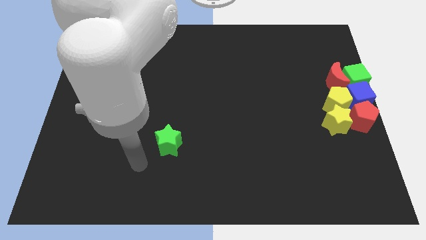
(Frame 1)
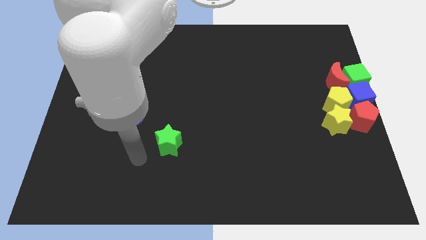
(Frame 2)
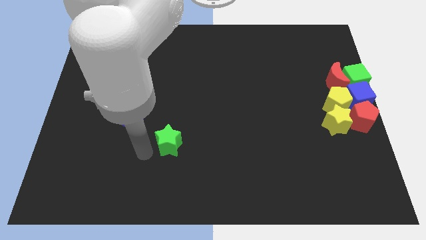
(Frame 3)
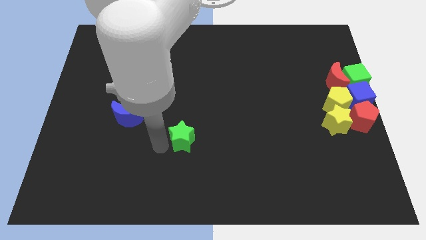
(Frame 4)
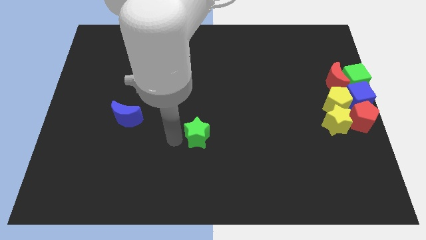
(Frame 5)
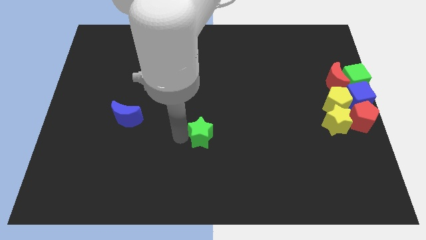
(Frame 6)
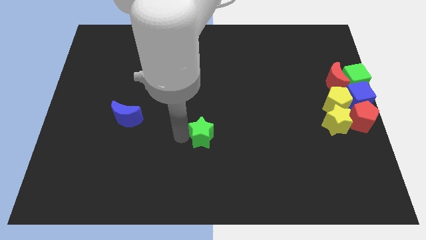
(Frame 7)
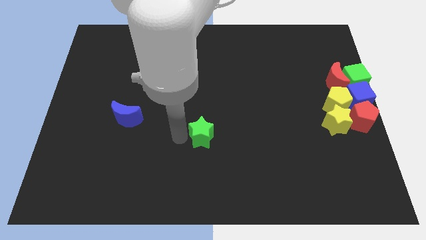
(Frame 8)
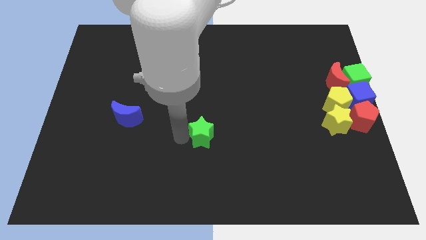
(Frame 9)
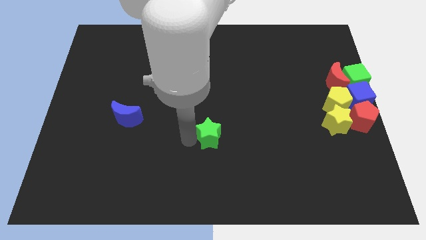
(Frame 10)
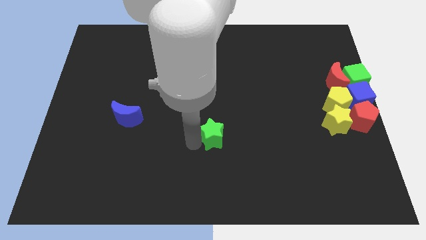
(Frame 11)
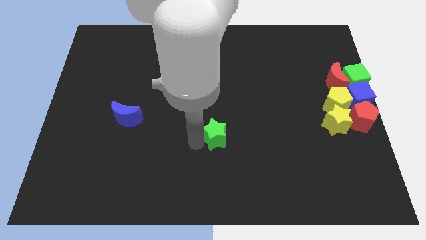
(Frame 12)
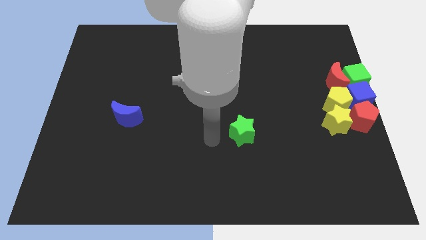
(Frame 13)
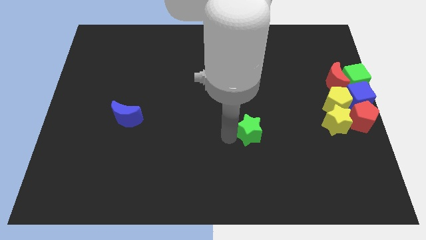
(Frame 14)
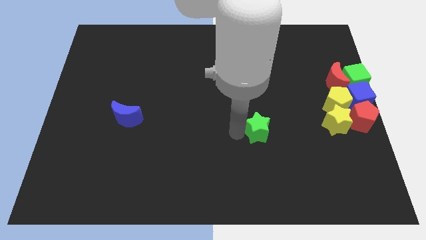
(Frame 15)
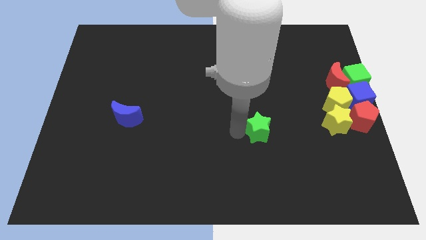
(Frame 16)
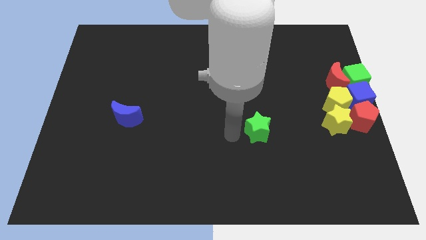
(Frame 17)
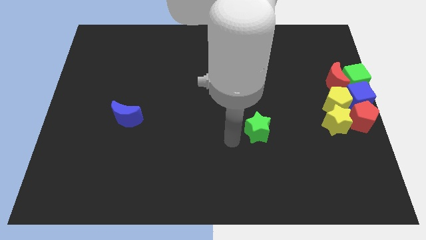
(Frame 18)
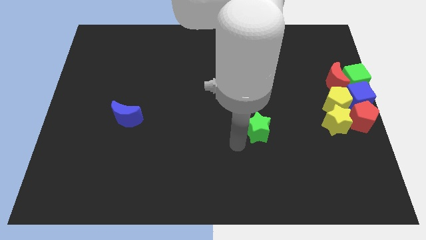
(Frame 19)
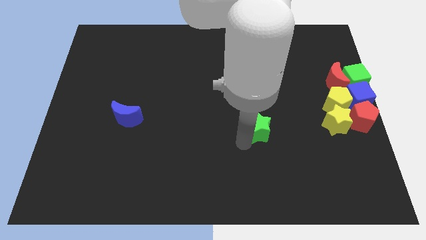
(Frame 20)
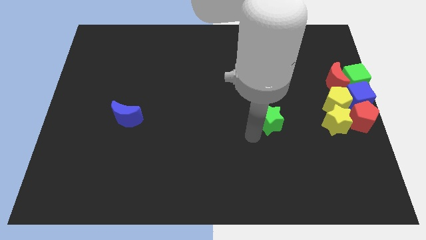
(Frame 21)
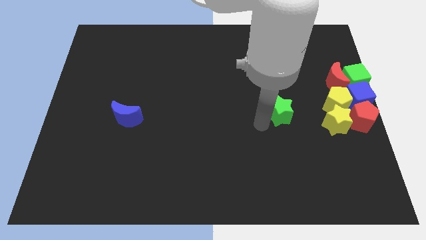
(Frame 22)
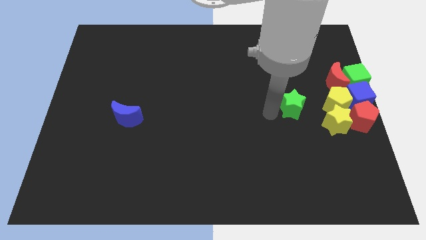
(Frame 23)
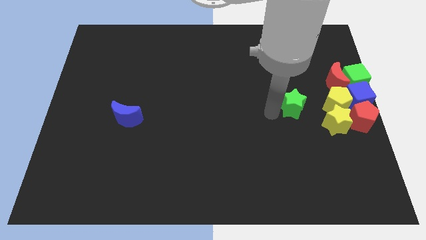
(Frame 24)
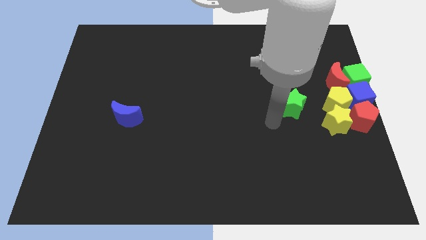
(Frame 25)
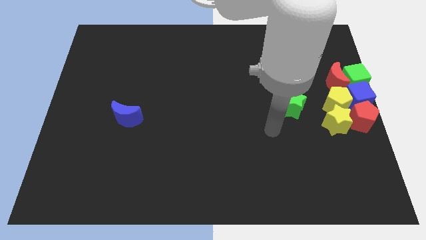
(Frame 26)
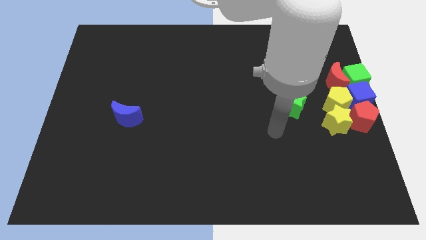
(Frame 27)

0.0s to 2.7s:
place the green star parallel left to the yellow star

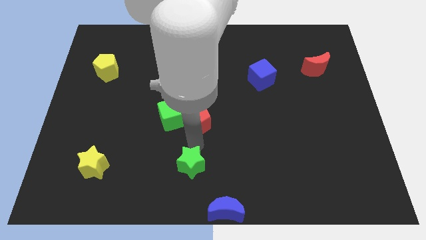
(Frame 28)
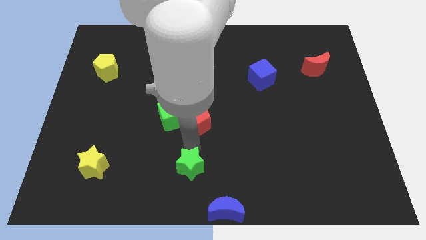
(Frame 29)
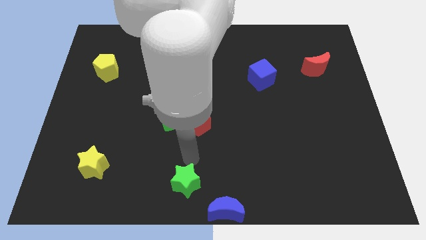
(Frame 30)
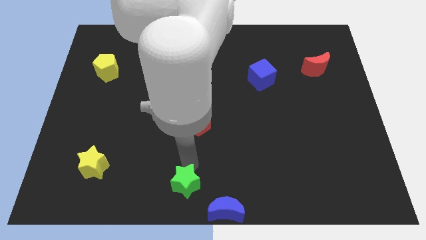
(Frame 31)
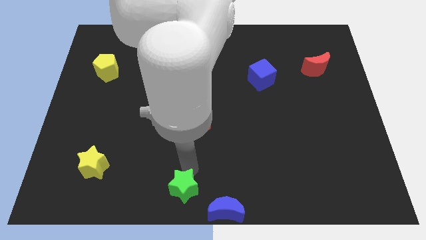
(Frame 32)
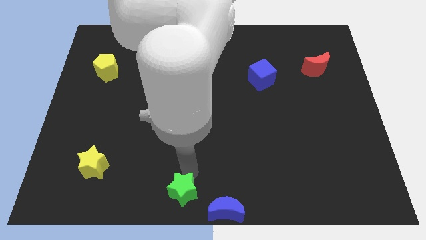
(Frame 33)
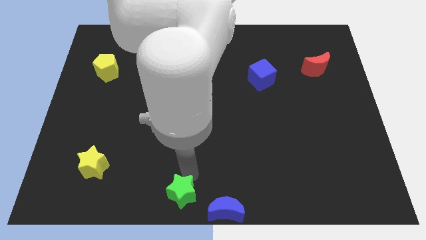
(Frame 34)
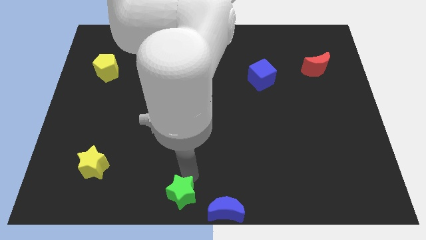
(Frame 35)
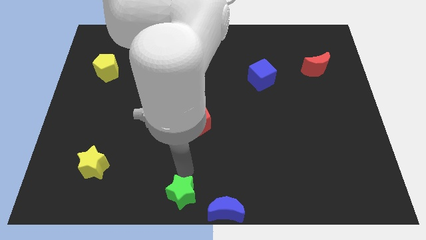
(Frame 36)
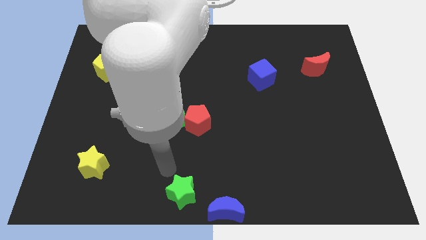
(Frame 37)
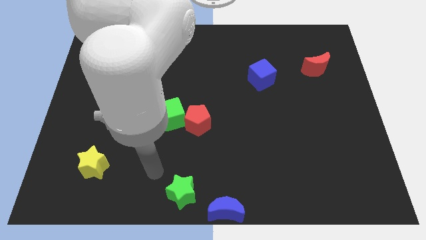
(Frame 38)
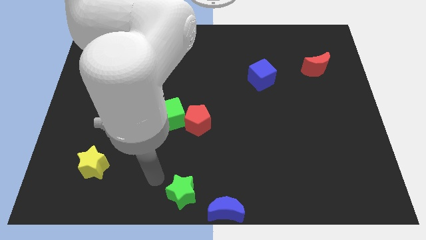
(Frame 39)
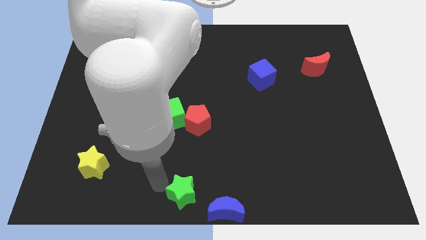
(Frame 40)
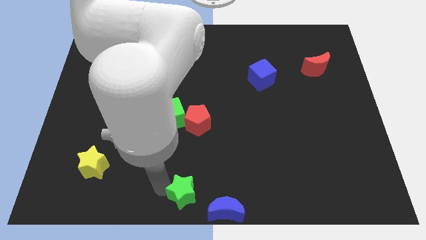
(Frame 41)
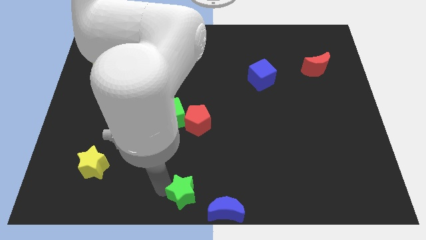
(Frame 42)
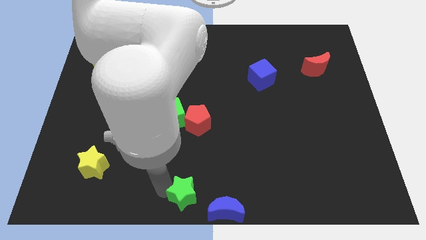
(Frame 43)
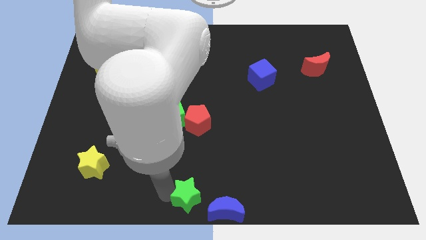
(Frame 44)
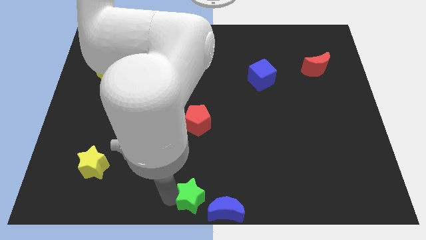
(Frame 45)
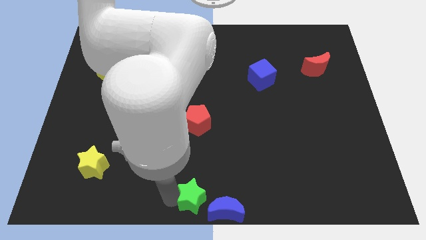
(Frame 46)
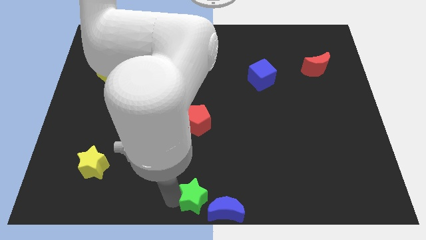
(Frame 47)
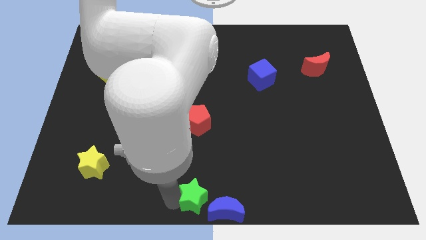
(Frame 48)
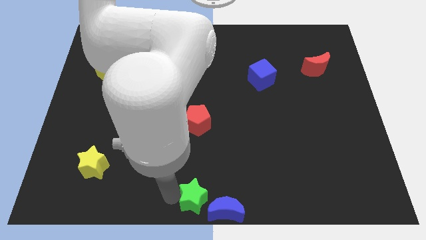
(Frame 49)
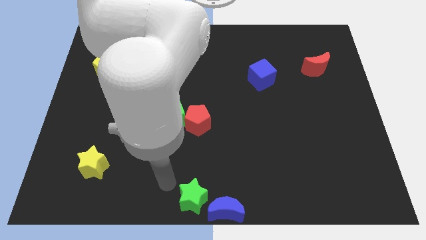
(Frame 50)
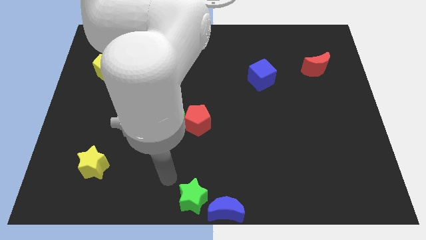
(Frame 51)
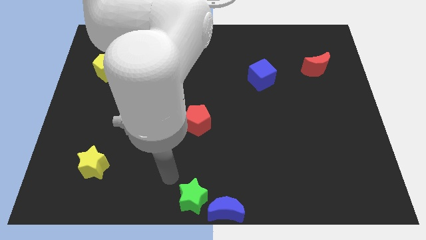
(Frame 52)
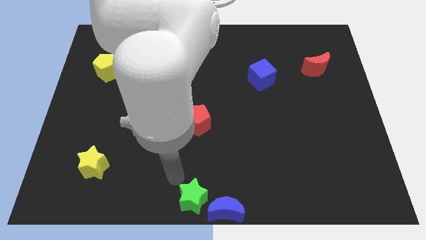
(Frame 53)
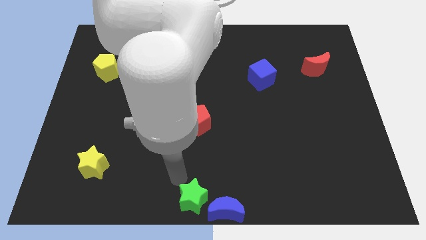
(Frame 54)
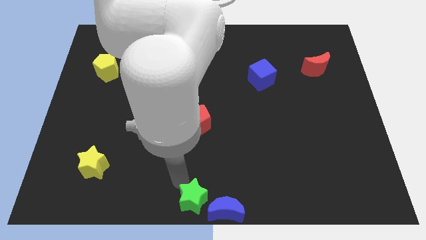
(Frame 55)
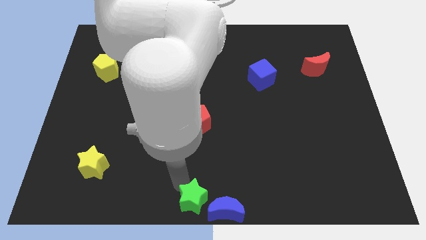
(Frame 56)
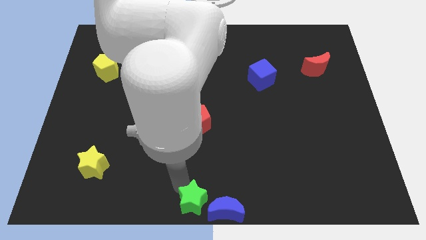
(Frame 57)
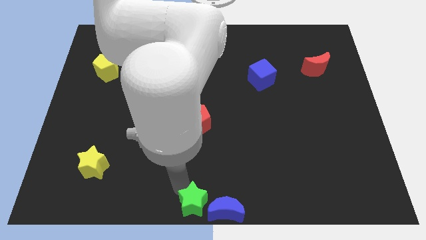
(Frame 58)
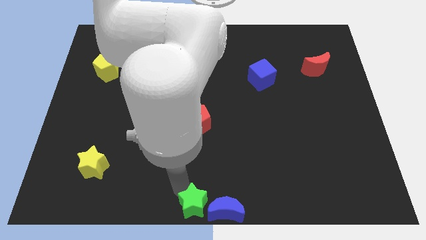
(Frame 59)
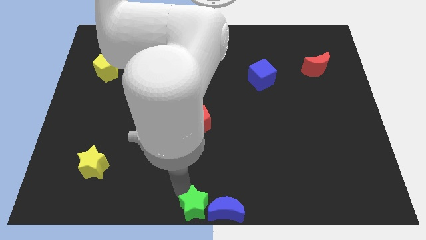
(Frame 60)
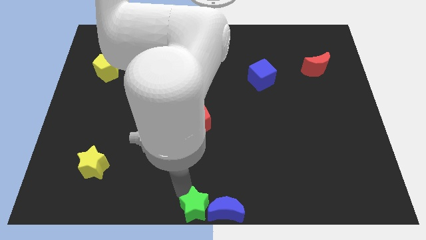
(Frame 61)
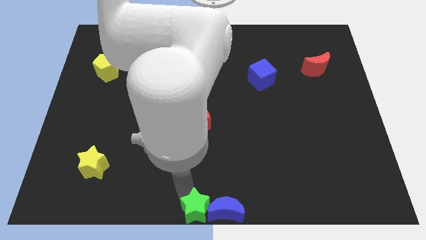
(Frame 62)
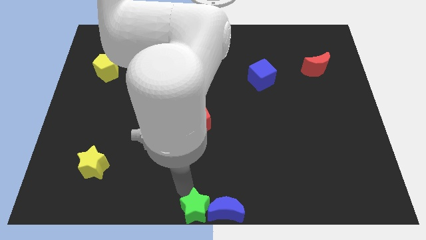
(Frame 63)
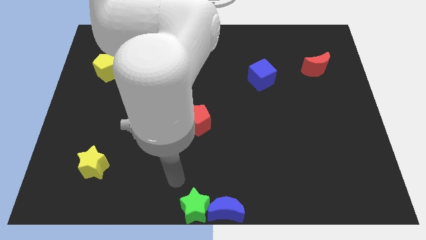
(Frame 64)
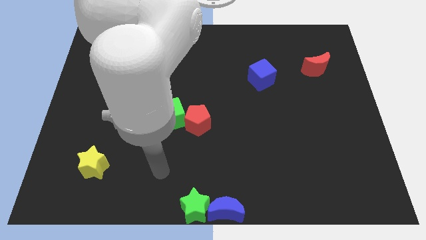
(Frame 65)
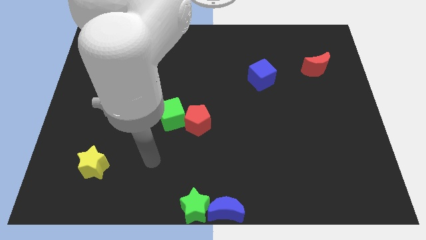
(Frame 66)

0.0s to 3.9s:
put the green star on the left side of the blue crescent

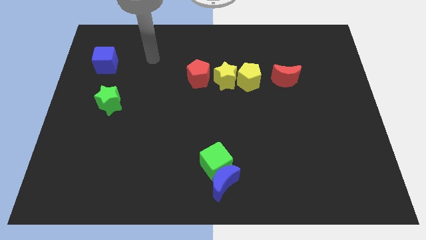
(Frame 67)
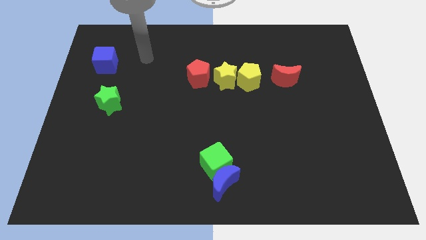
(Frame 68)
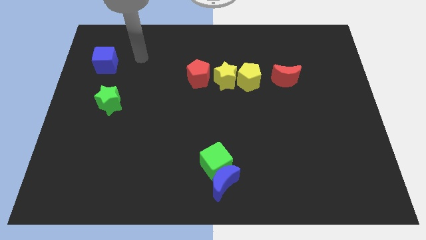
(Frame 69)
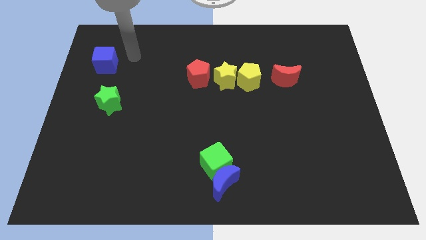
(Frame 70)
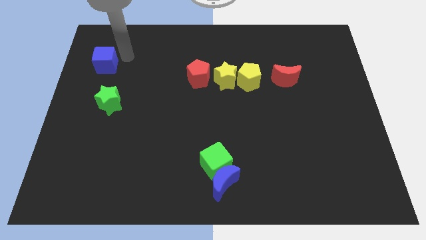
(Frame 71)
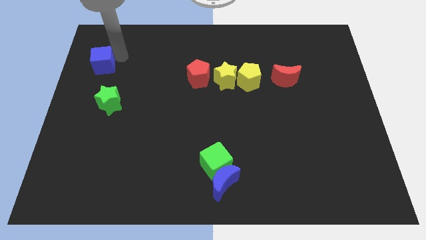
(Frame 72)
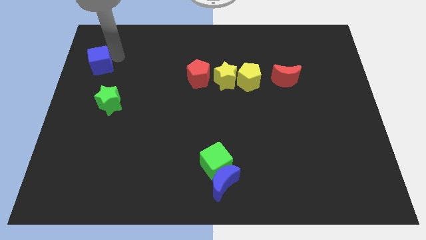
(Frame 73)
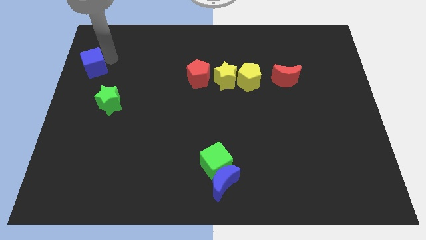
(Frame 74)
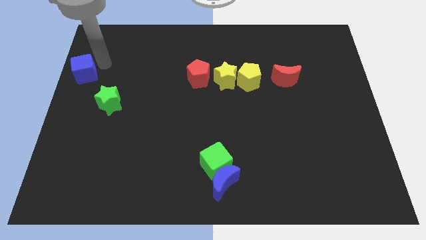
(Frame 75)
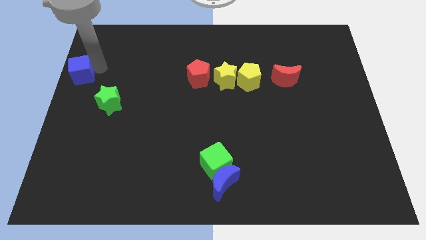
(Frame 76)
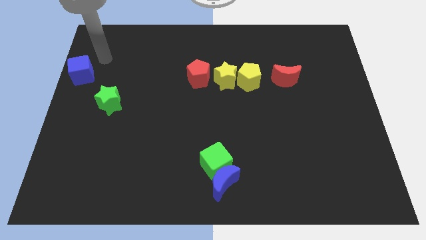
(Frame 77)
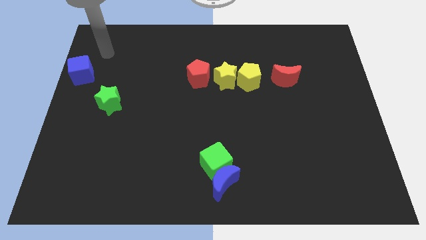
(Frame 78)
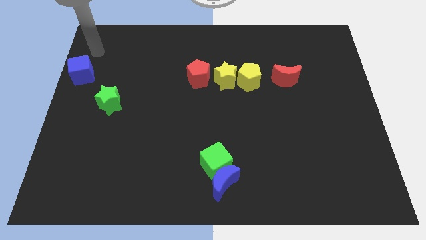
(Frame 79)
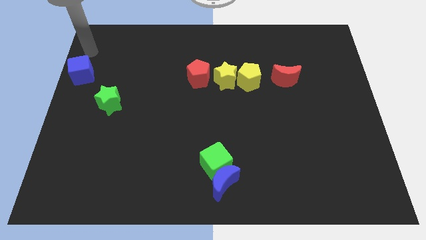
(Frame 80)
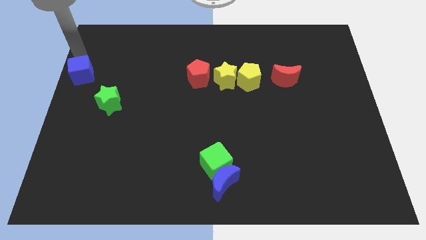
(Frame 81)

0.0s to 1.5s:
push blue cube diagonally top left to the green star

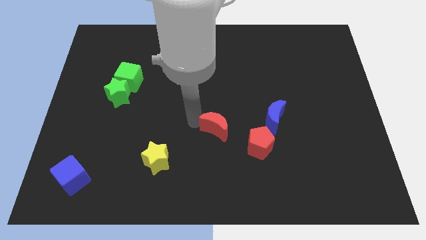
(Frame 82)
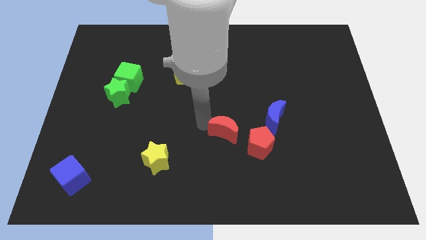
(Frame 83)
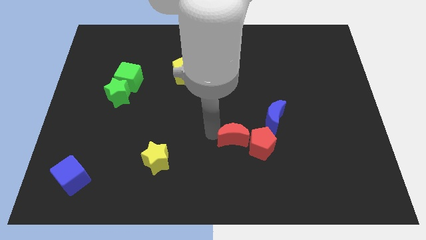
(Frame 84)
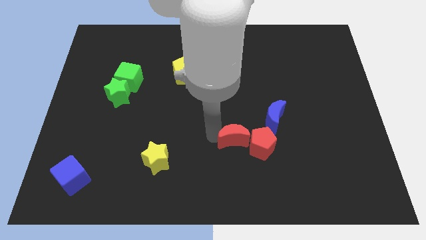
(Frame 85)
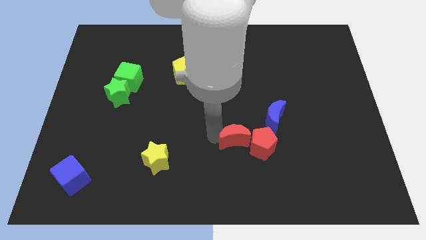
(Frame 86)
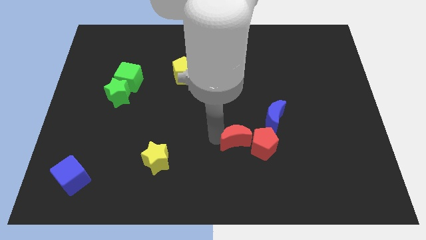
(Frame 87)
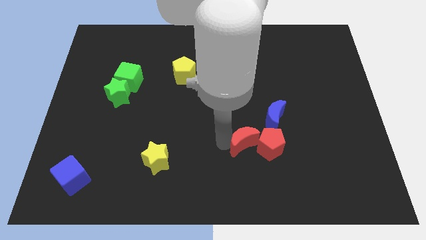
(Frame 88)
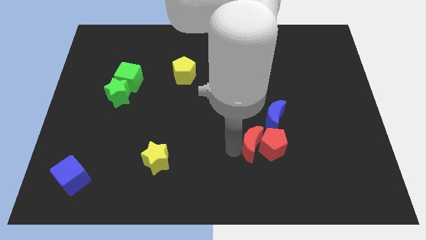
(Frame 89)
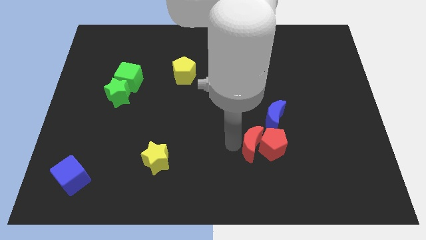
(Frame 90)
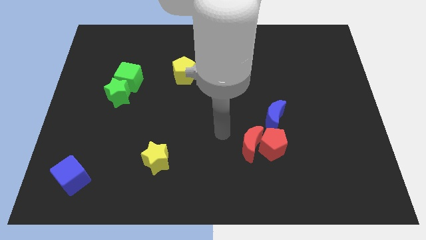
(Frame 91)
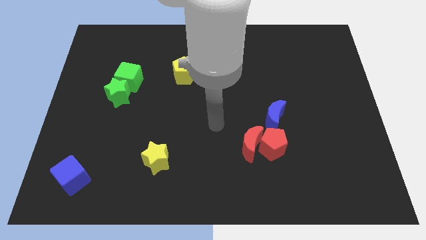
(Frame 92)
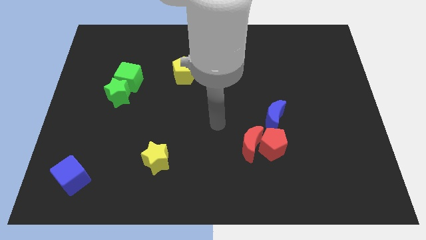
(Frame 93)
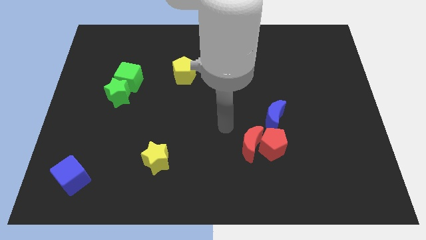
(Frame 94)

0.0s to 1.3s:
move the red crescent into the left of the red pentagon
